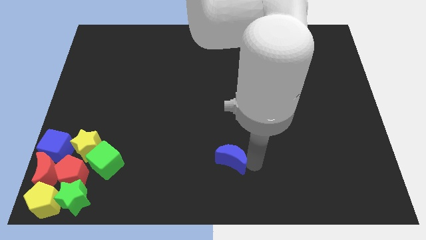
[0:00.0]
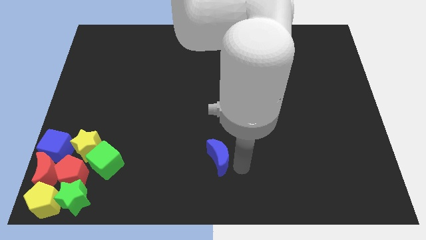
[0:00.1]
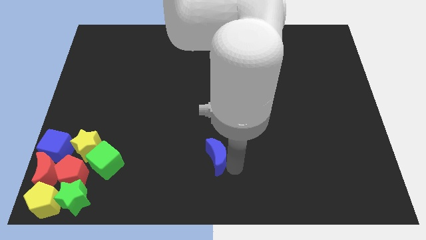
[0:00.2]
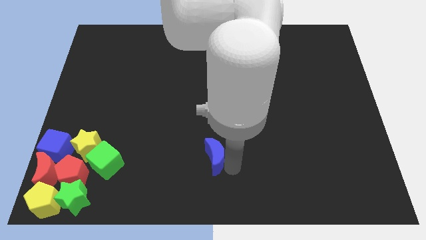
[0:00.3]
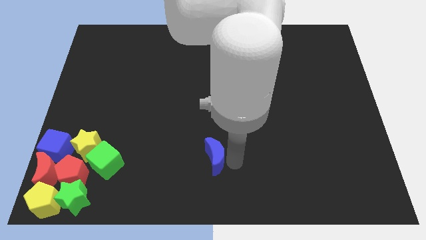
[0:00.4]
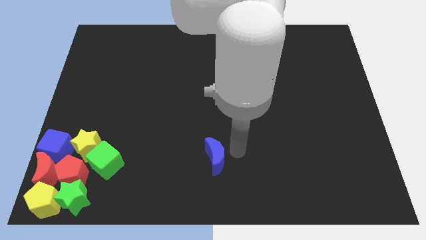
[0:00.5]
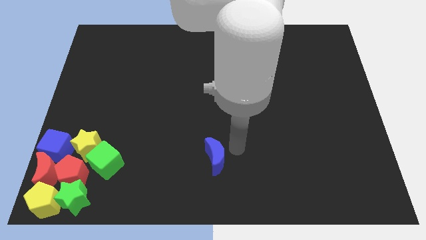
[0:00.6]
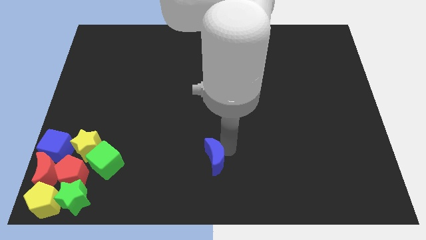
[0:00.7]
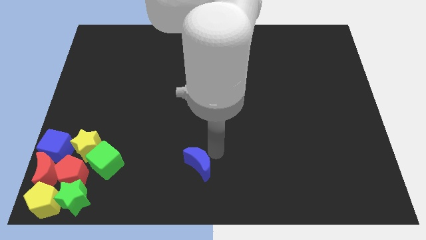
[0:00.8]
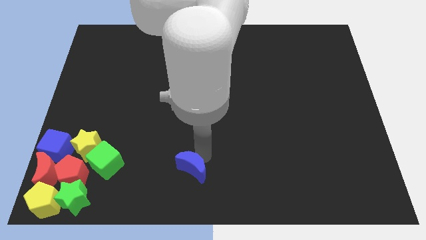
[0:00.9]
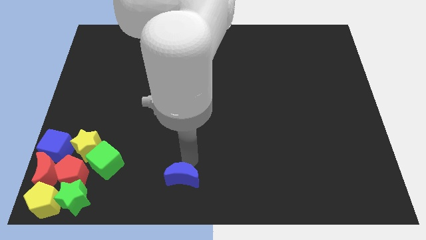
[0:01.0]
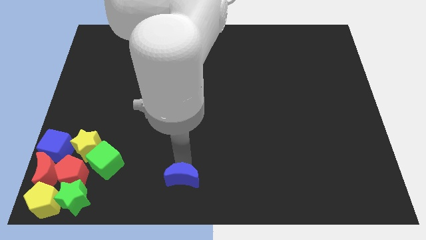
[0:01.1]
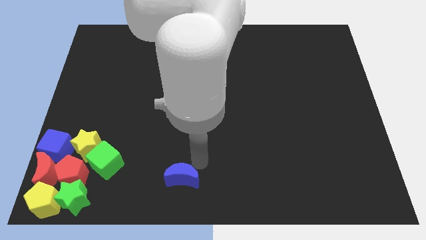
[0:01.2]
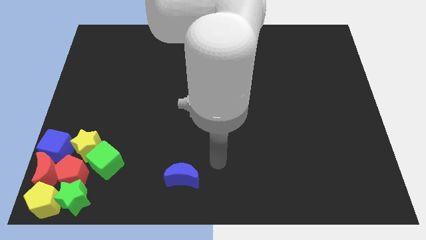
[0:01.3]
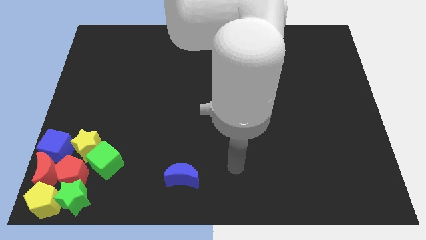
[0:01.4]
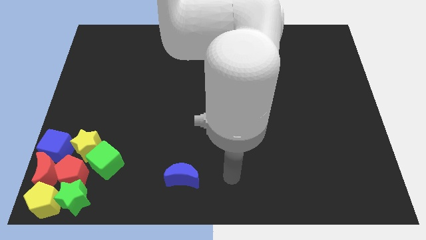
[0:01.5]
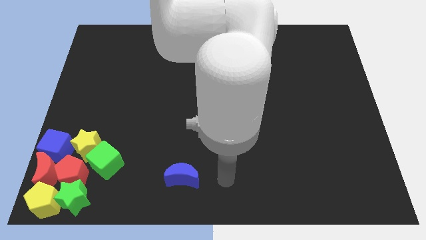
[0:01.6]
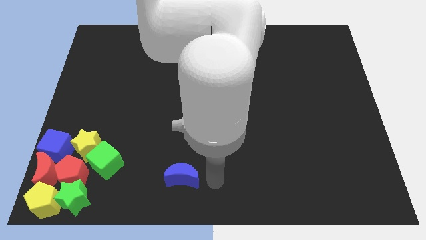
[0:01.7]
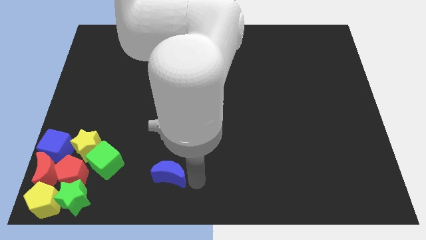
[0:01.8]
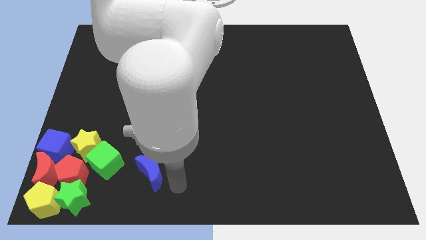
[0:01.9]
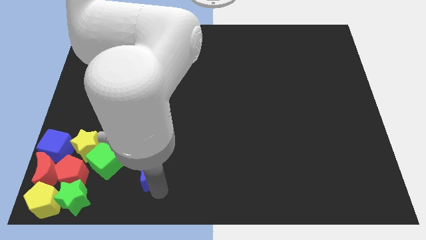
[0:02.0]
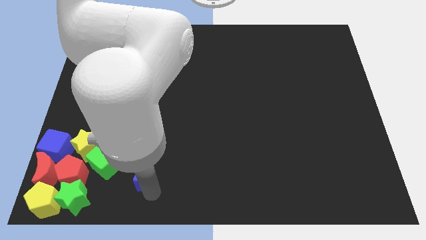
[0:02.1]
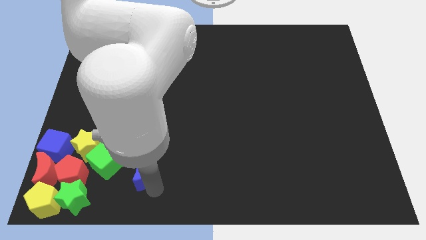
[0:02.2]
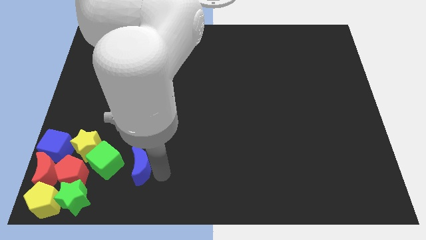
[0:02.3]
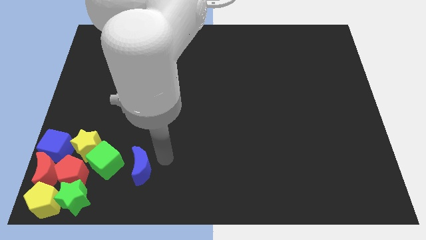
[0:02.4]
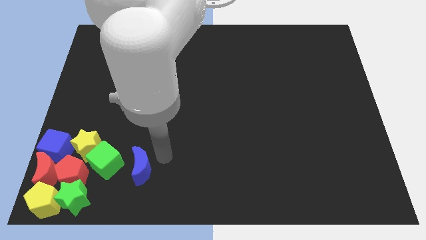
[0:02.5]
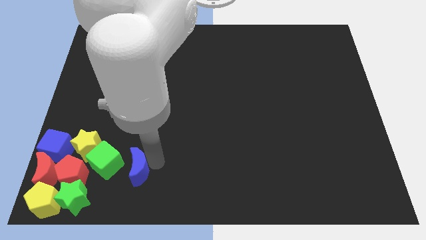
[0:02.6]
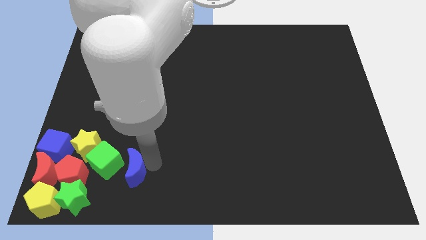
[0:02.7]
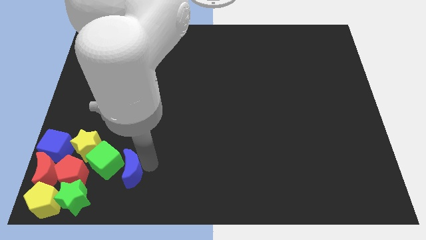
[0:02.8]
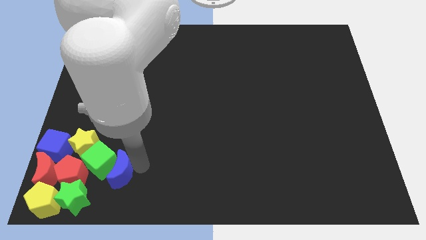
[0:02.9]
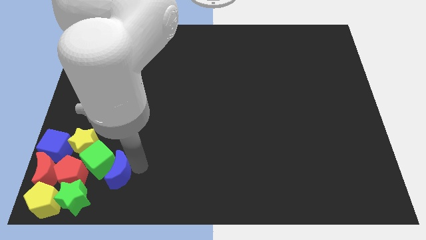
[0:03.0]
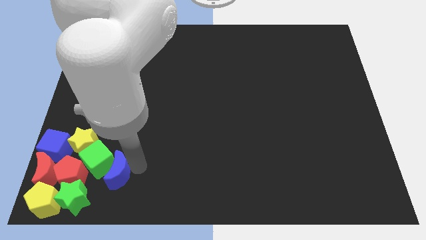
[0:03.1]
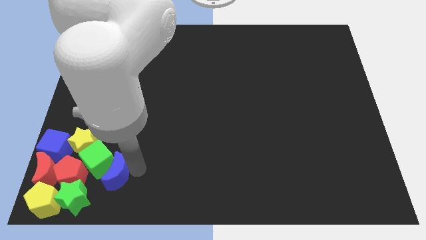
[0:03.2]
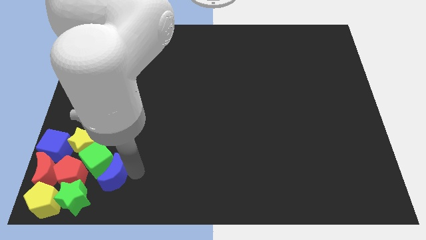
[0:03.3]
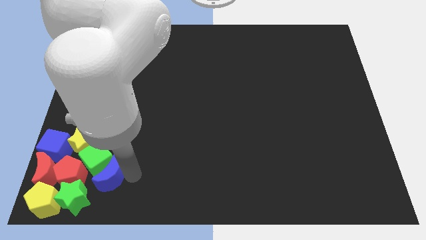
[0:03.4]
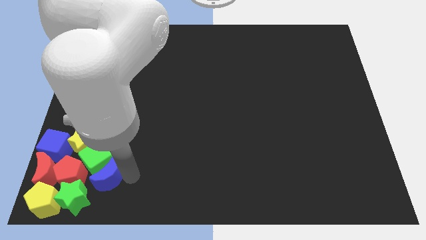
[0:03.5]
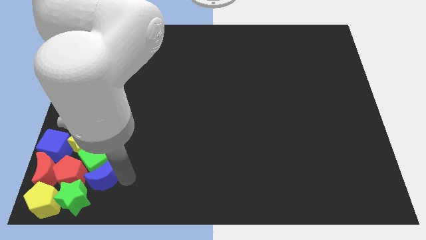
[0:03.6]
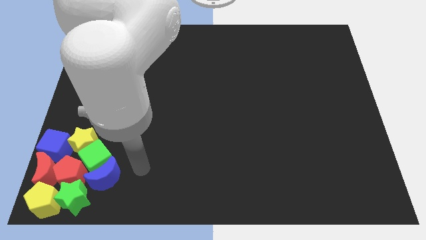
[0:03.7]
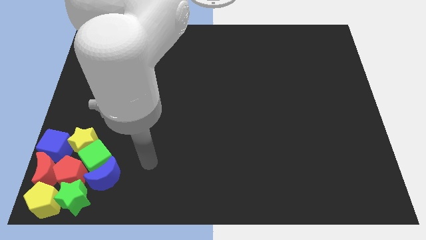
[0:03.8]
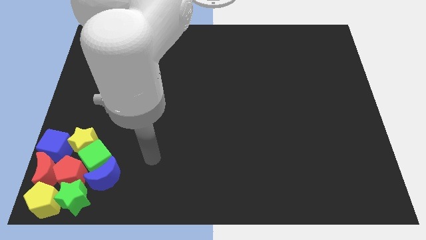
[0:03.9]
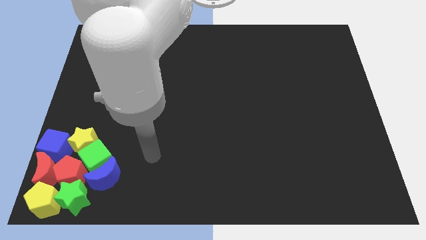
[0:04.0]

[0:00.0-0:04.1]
place the blue crescent to the right of the red pentagon

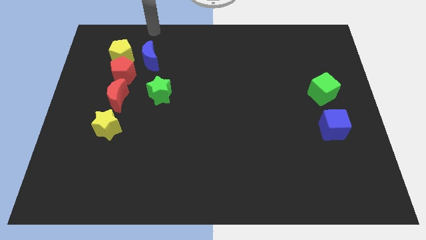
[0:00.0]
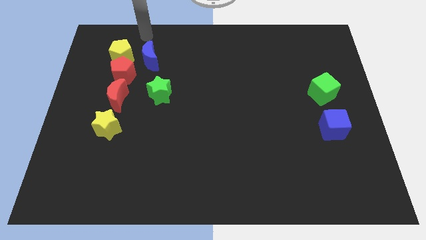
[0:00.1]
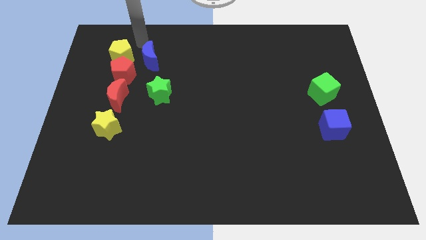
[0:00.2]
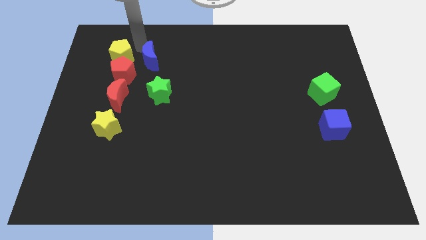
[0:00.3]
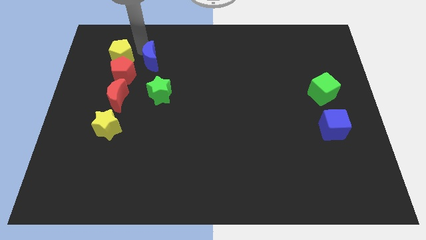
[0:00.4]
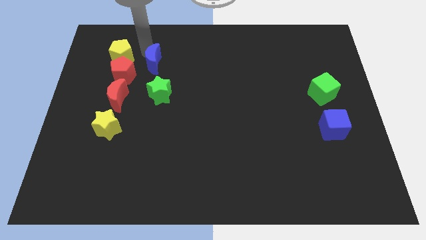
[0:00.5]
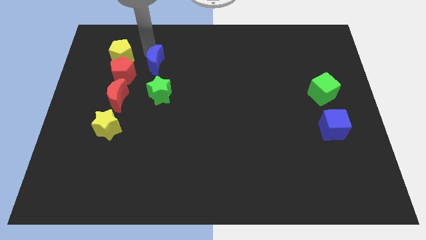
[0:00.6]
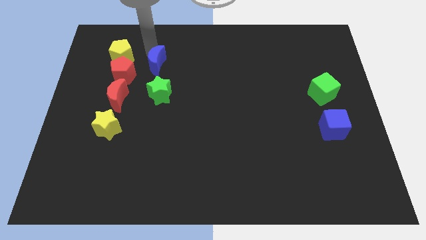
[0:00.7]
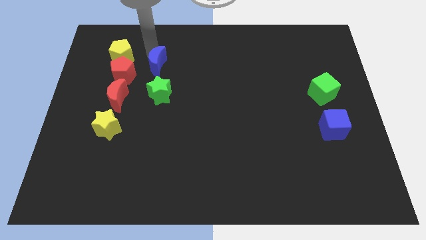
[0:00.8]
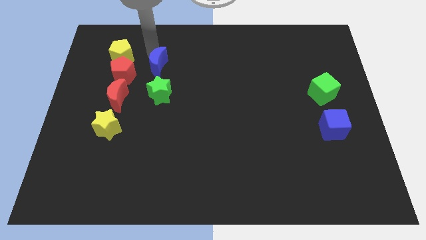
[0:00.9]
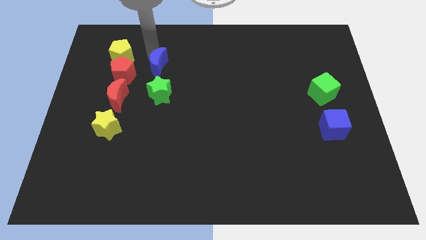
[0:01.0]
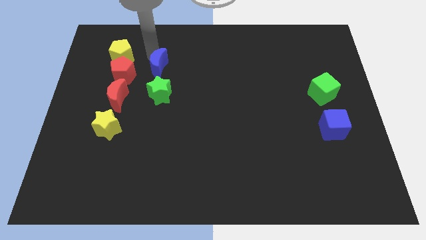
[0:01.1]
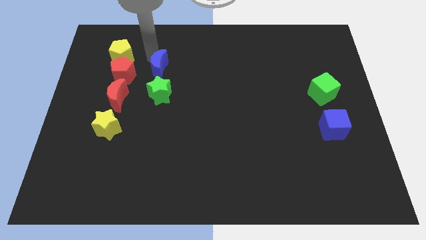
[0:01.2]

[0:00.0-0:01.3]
place blue moon above the green star

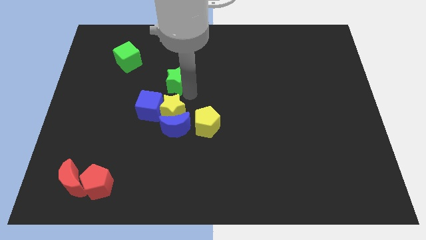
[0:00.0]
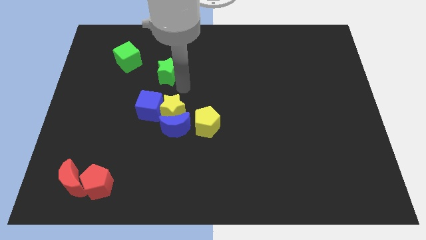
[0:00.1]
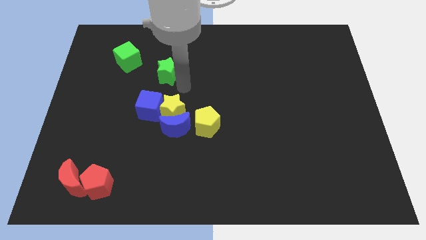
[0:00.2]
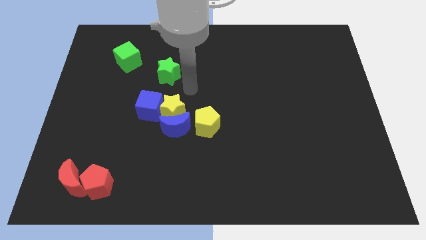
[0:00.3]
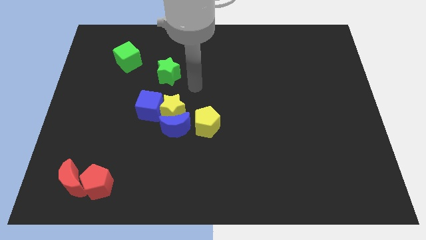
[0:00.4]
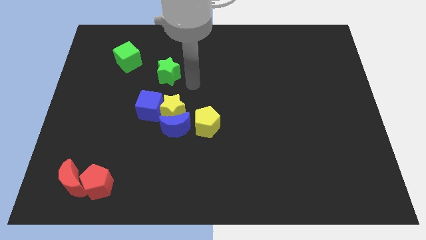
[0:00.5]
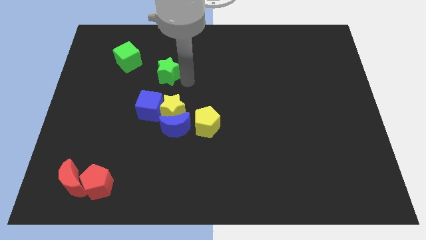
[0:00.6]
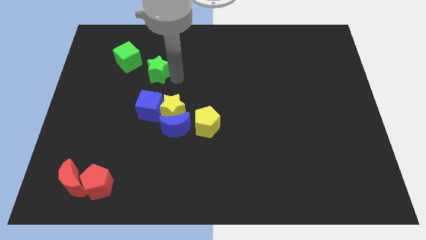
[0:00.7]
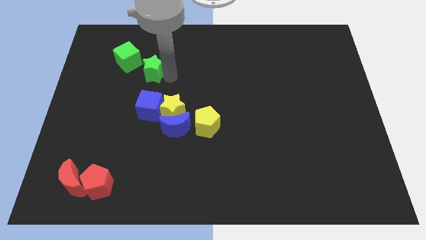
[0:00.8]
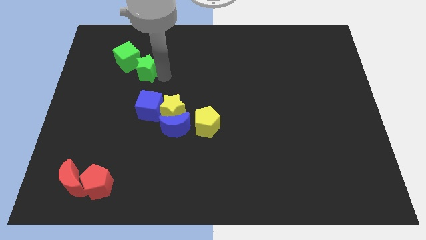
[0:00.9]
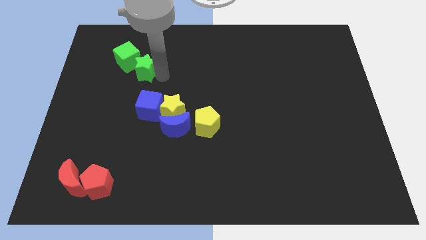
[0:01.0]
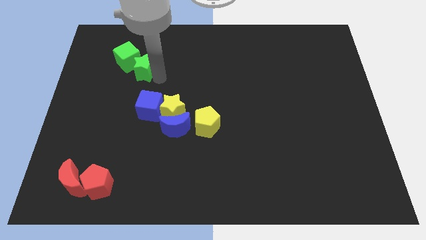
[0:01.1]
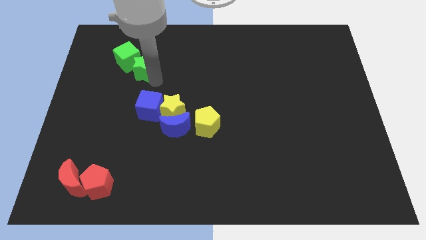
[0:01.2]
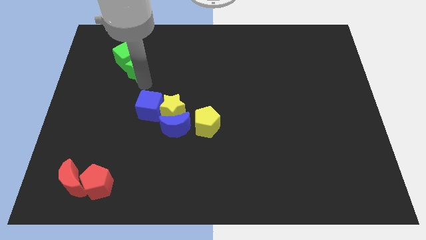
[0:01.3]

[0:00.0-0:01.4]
move the green star bottom right to the green cube

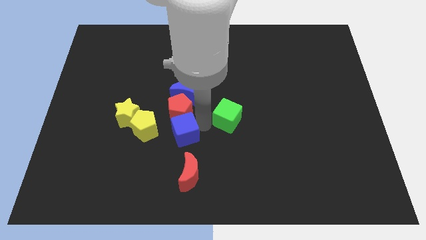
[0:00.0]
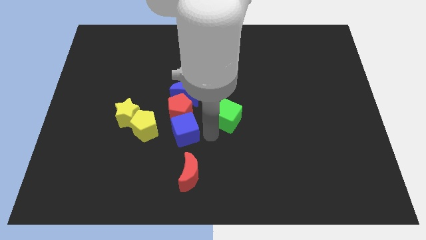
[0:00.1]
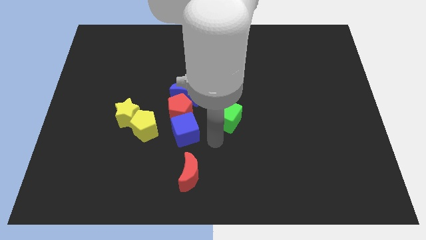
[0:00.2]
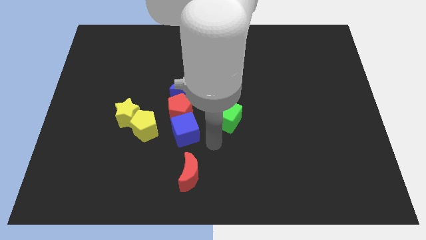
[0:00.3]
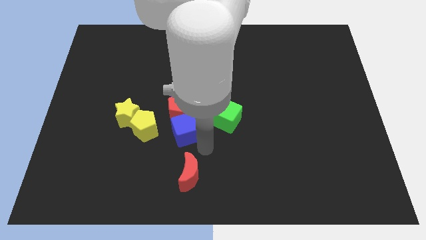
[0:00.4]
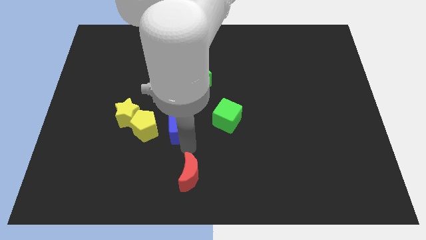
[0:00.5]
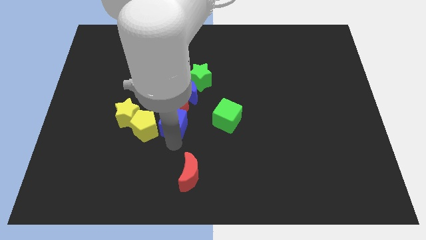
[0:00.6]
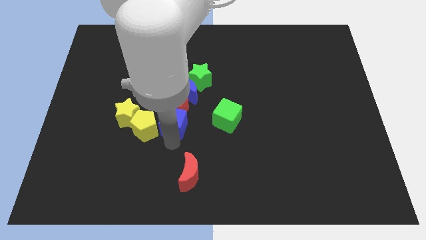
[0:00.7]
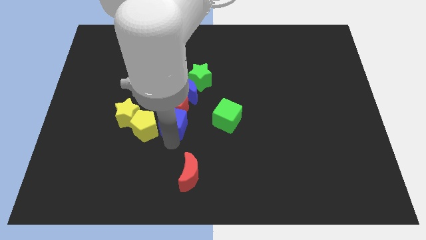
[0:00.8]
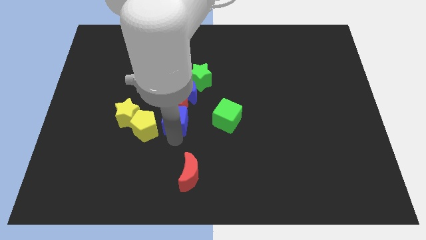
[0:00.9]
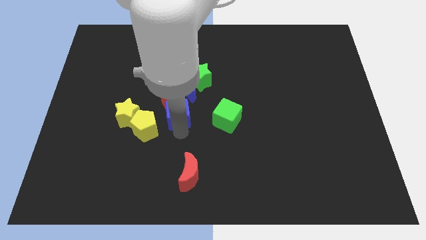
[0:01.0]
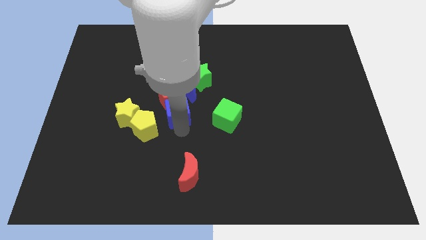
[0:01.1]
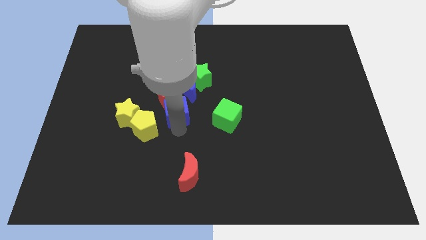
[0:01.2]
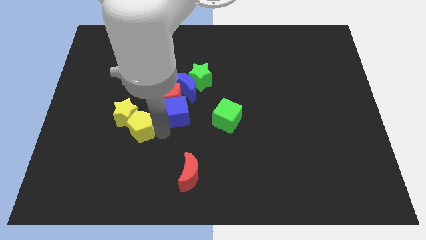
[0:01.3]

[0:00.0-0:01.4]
slightly push the blue cube and red pentagon towards up

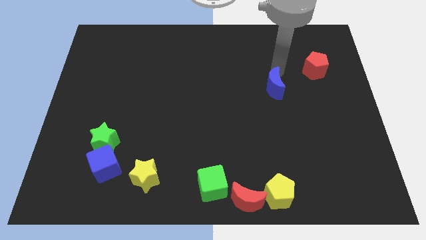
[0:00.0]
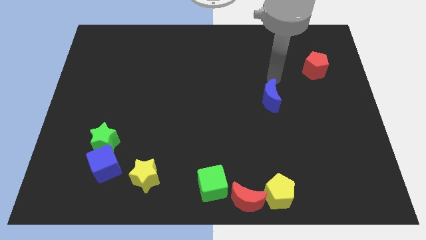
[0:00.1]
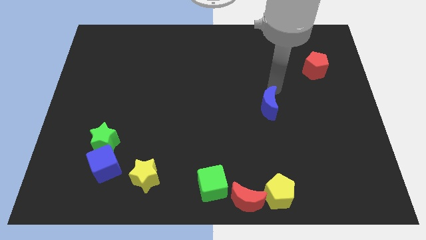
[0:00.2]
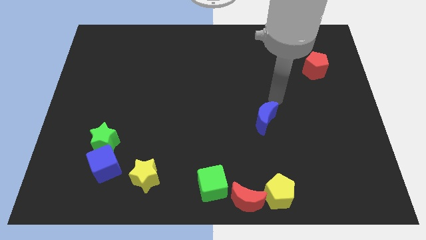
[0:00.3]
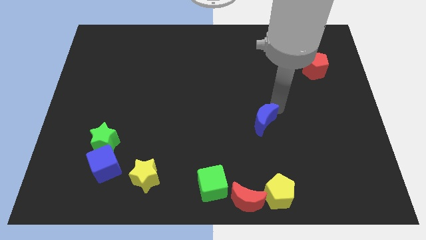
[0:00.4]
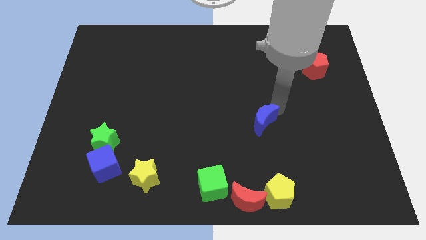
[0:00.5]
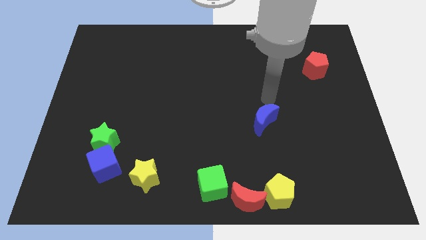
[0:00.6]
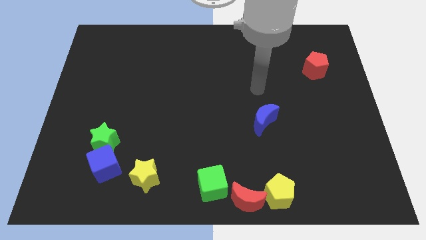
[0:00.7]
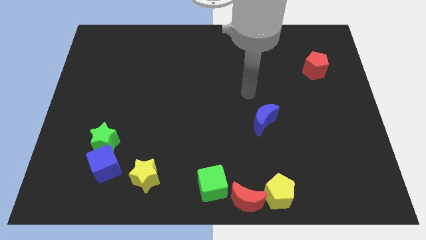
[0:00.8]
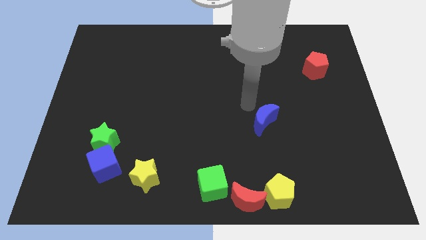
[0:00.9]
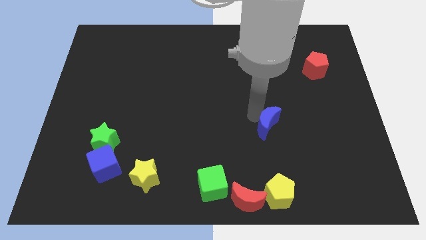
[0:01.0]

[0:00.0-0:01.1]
place blue moon above yellow pentagon
